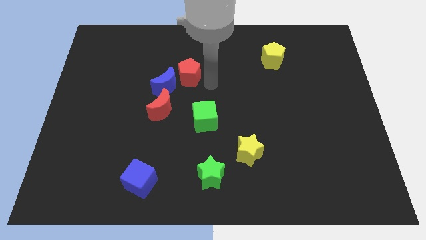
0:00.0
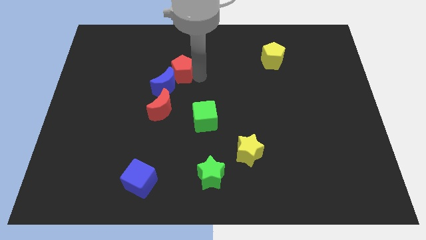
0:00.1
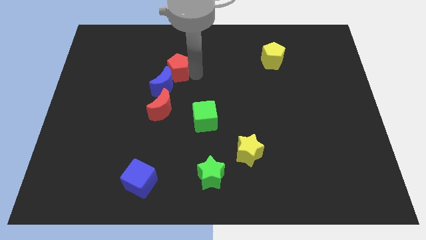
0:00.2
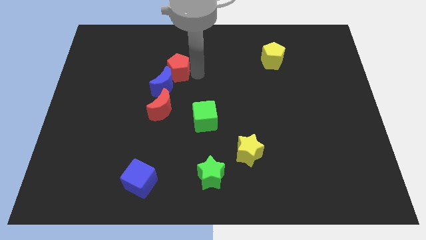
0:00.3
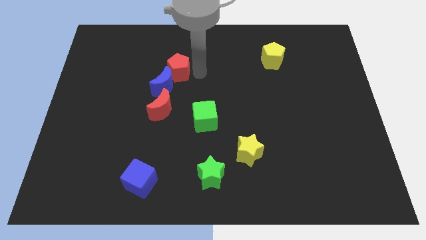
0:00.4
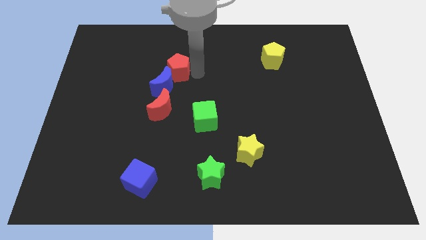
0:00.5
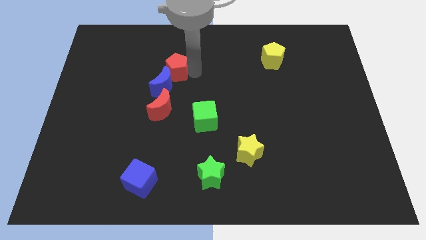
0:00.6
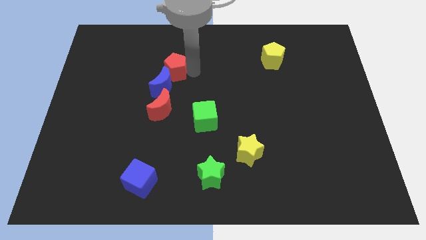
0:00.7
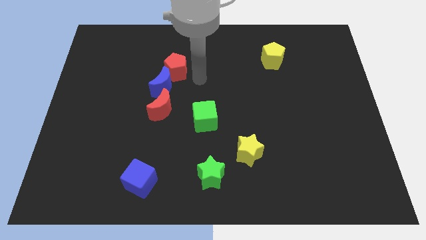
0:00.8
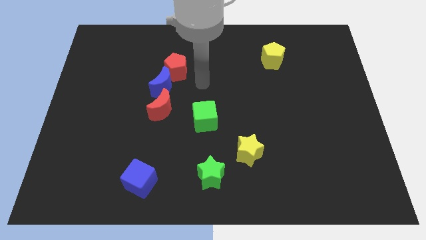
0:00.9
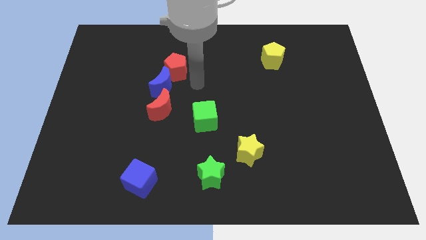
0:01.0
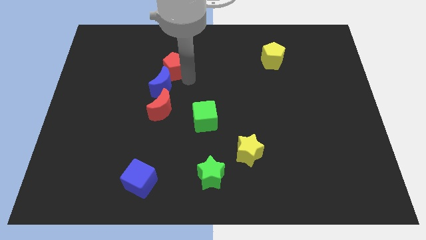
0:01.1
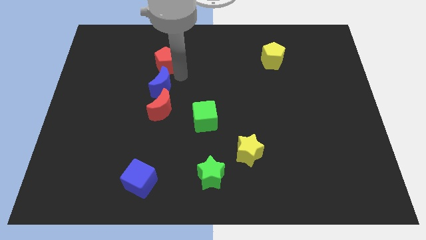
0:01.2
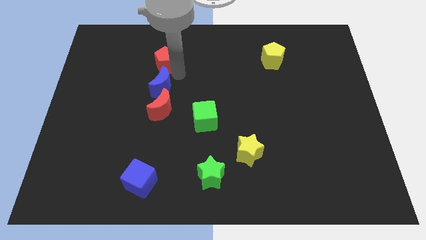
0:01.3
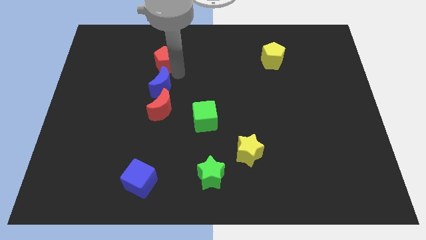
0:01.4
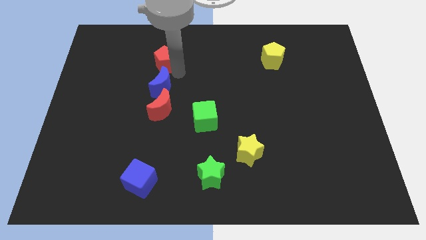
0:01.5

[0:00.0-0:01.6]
move the red pentagon above the blue crescent

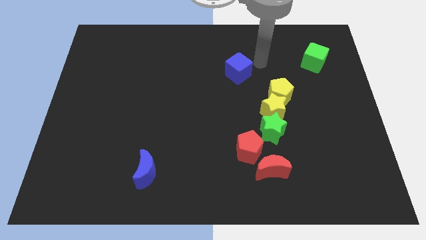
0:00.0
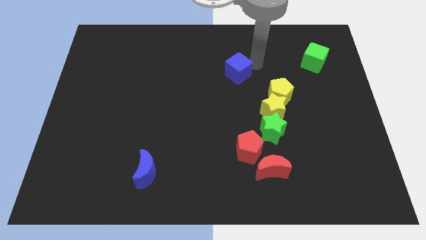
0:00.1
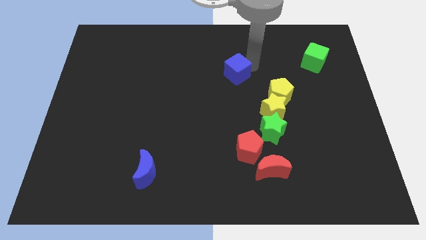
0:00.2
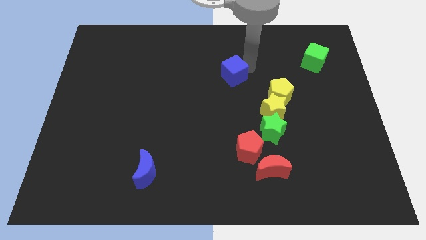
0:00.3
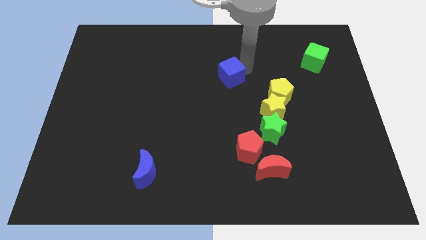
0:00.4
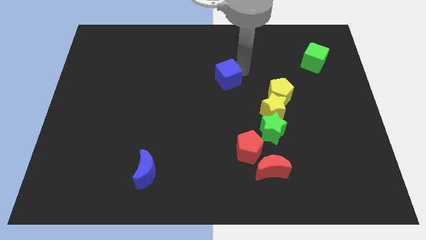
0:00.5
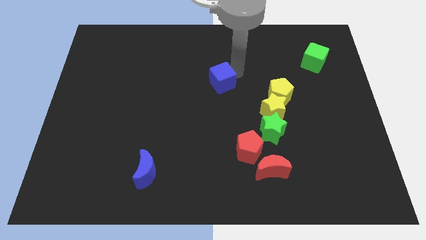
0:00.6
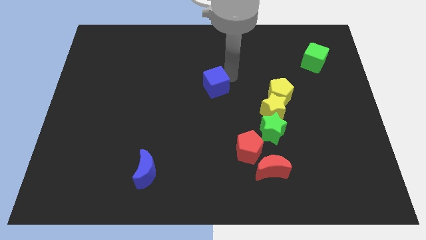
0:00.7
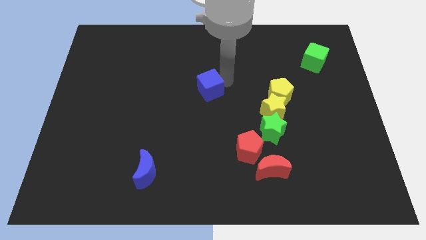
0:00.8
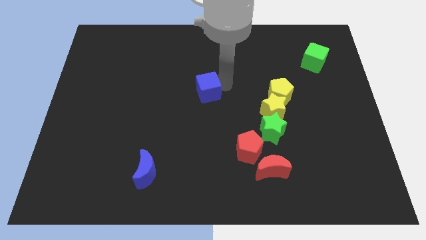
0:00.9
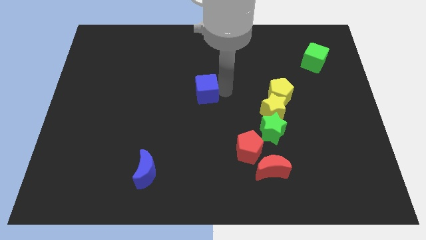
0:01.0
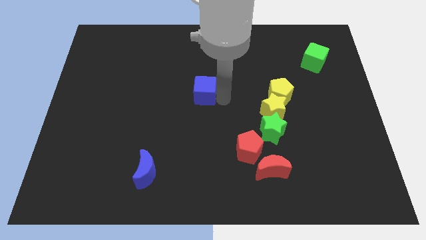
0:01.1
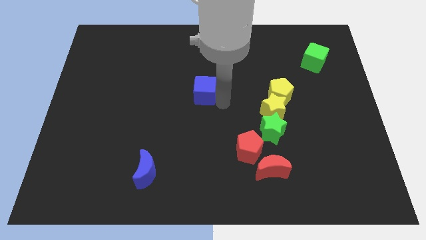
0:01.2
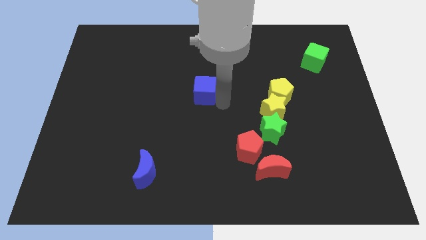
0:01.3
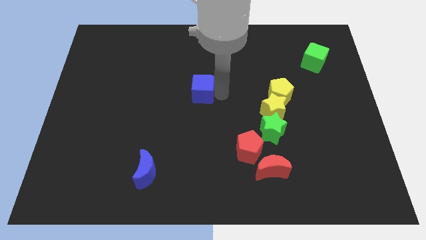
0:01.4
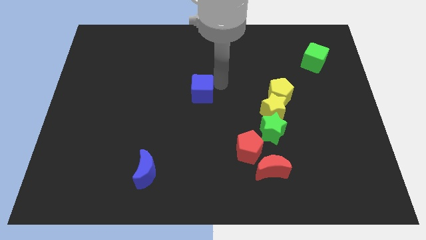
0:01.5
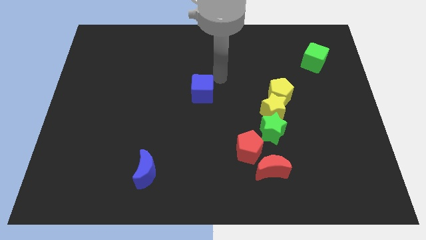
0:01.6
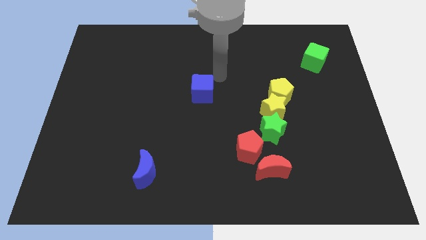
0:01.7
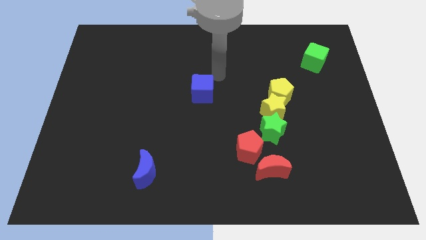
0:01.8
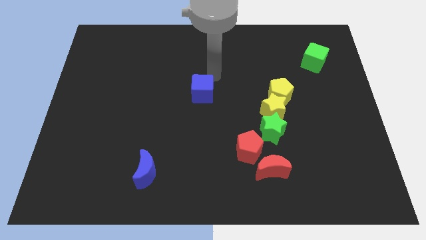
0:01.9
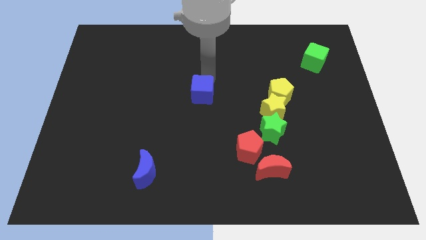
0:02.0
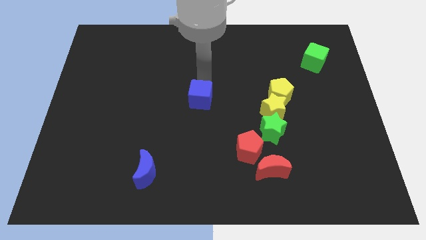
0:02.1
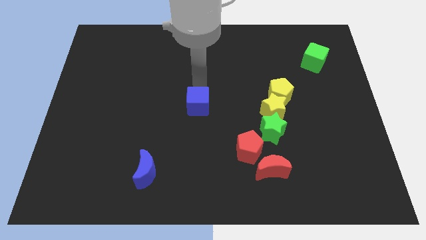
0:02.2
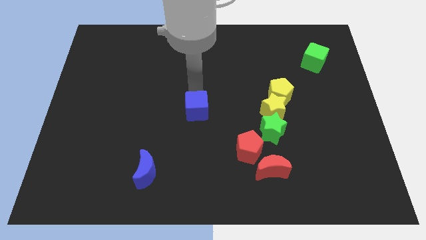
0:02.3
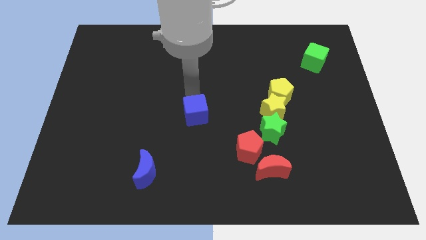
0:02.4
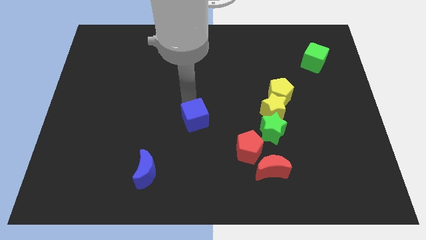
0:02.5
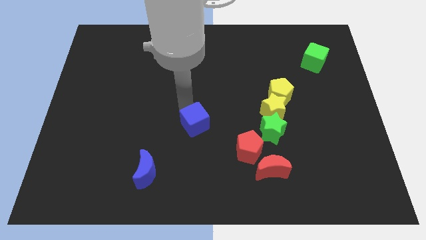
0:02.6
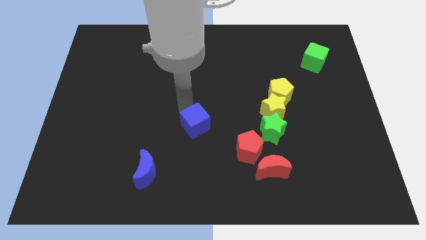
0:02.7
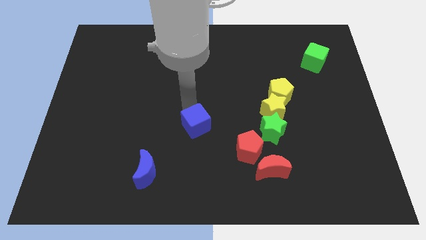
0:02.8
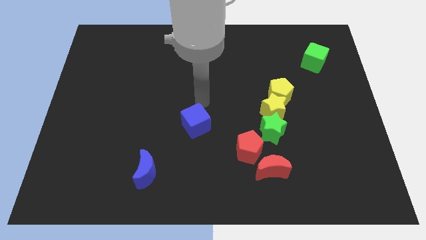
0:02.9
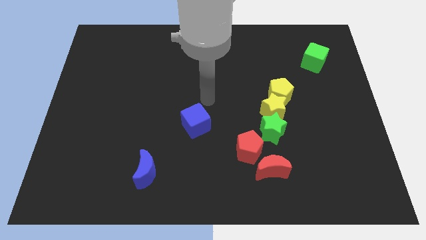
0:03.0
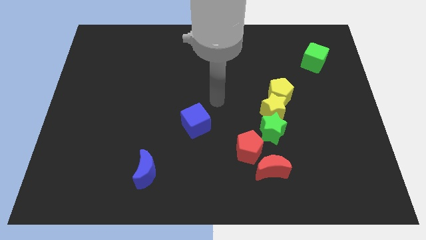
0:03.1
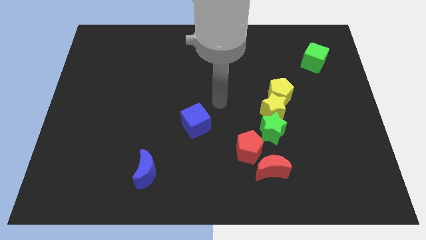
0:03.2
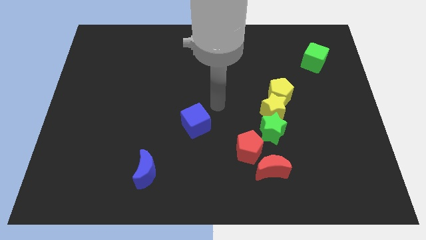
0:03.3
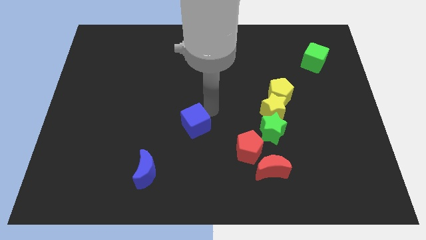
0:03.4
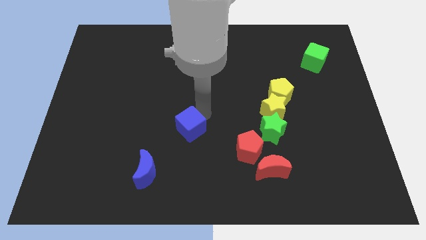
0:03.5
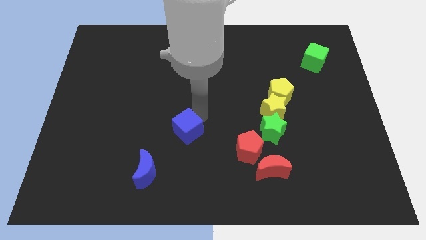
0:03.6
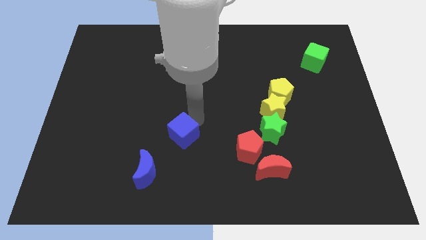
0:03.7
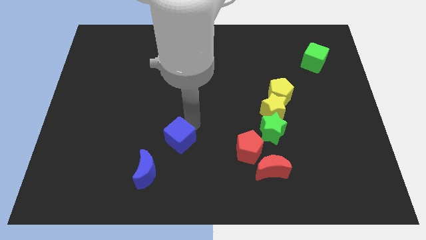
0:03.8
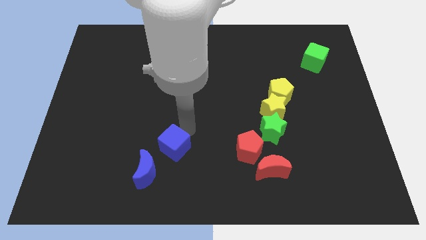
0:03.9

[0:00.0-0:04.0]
move the blue cube towards the blue moon

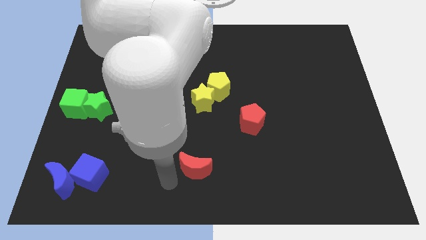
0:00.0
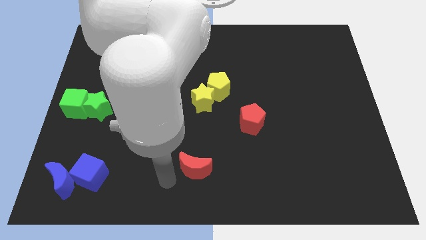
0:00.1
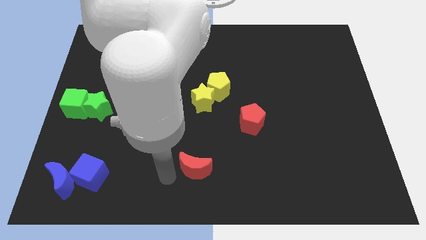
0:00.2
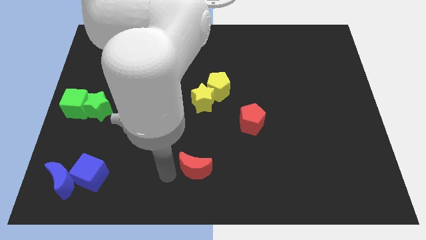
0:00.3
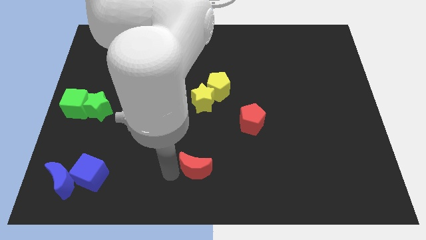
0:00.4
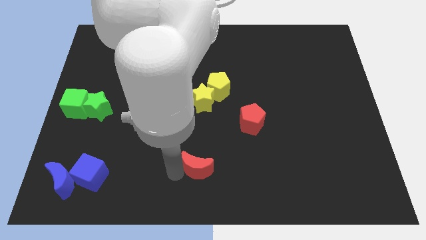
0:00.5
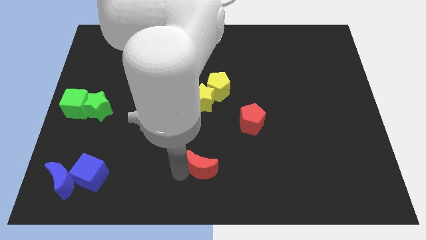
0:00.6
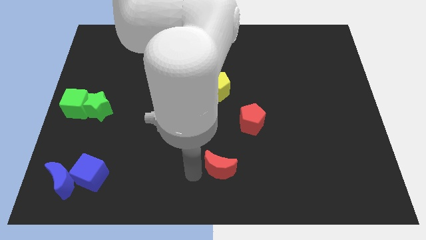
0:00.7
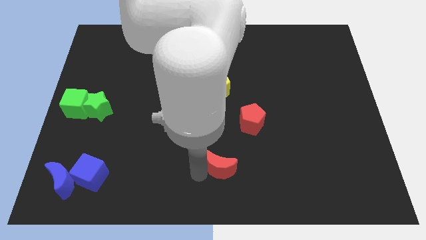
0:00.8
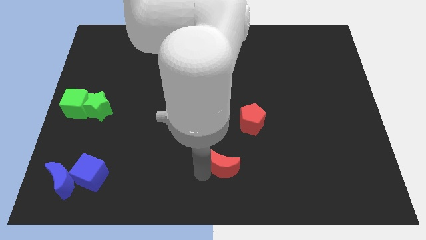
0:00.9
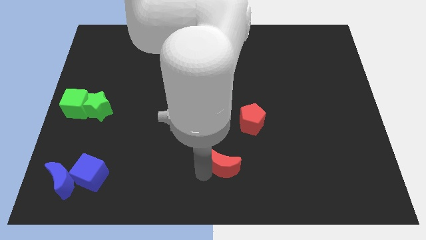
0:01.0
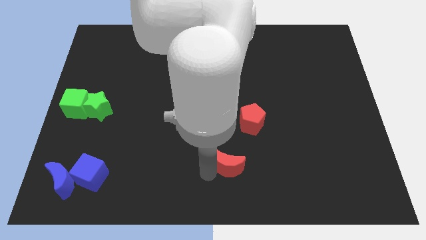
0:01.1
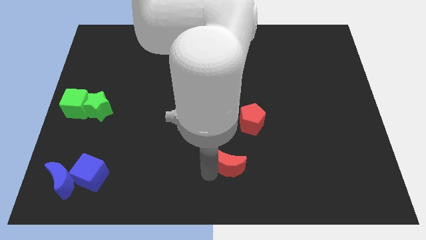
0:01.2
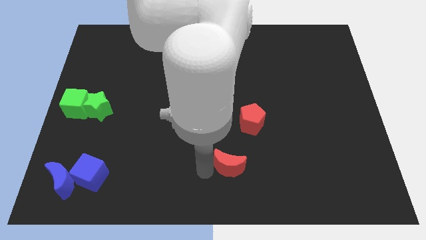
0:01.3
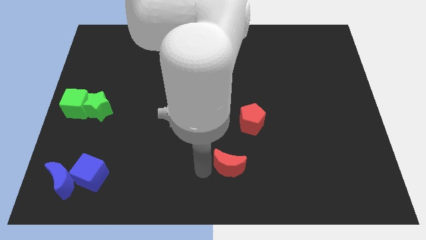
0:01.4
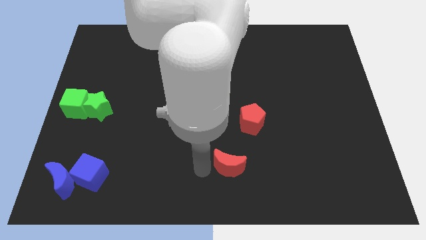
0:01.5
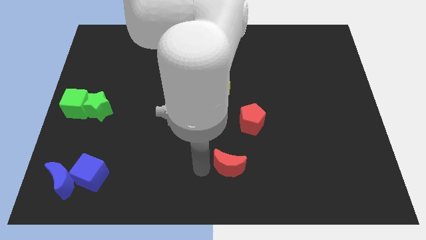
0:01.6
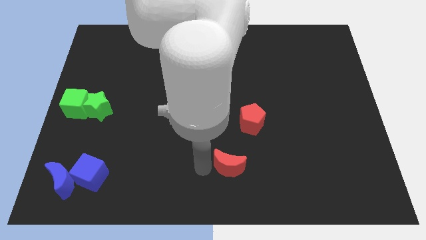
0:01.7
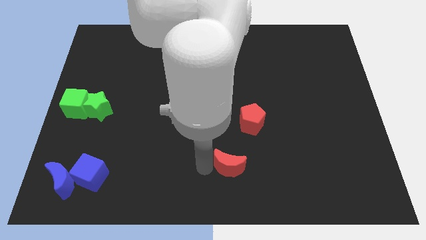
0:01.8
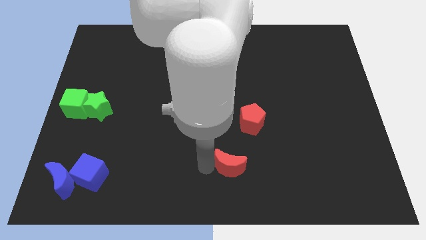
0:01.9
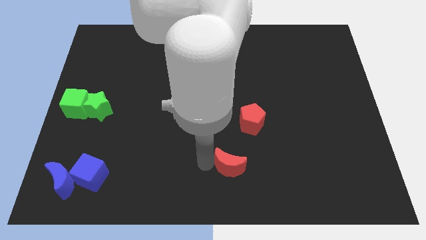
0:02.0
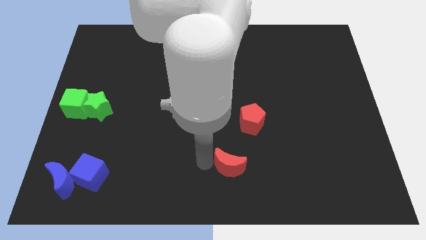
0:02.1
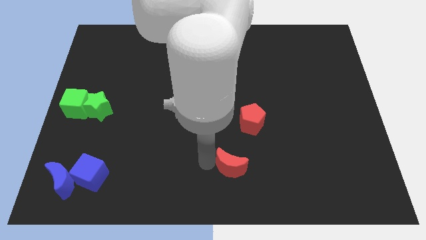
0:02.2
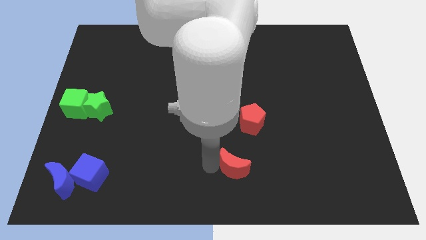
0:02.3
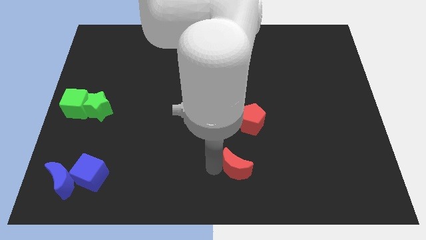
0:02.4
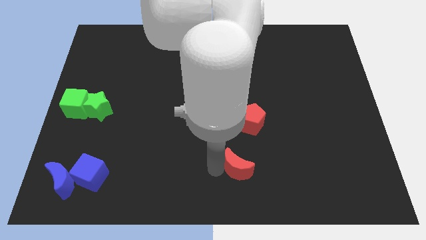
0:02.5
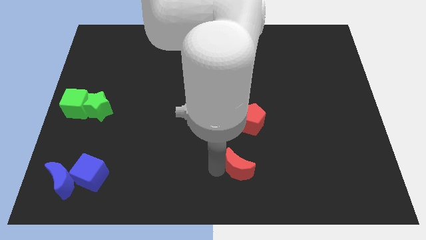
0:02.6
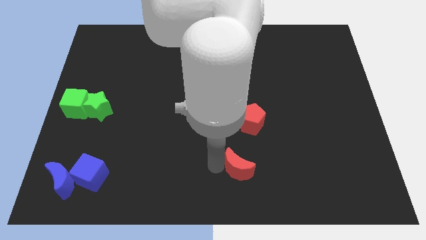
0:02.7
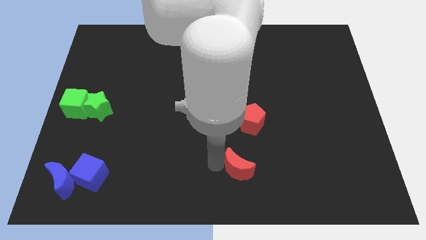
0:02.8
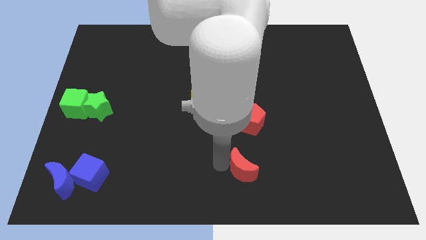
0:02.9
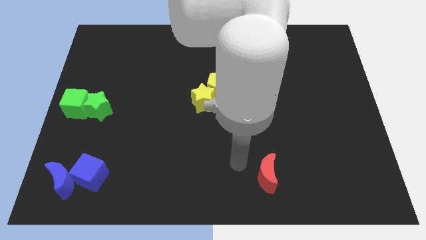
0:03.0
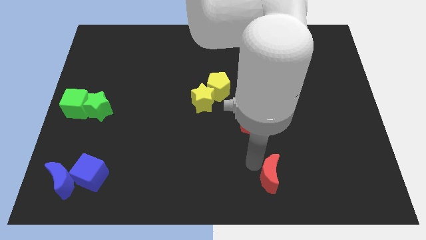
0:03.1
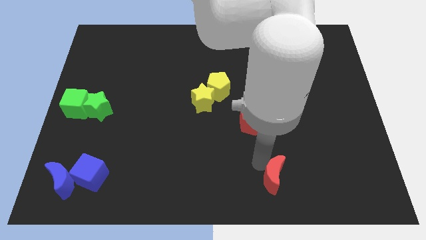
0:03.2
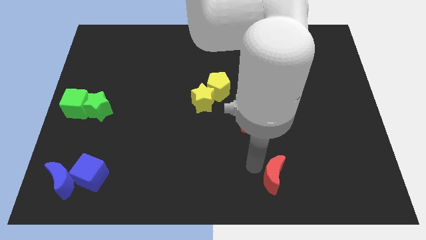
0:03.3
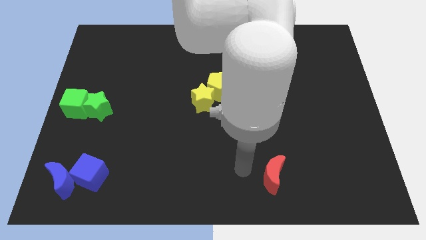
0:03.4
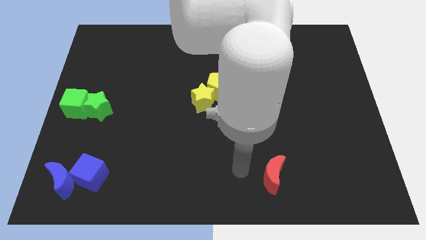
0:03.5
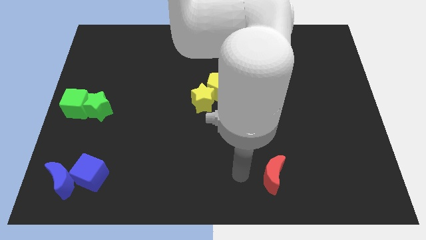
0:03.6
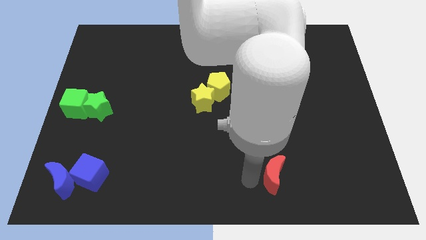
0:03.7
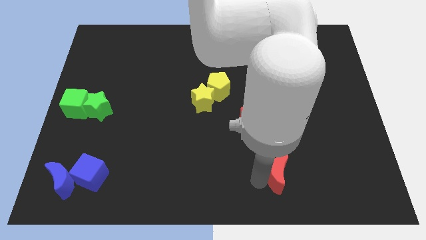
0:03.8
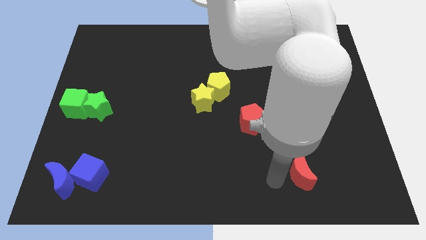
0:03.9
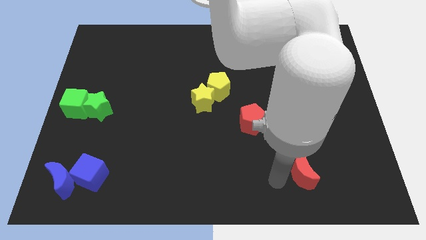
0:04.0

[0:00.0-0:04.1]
push the red crescent towards the bottom right
